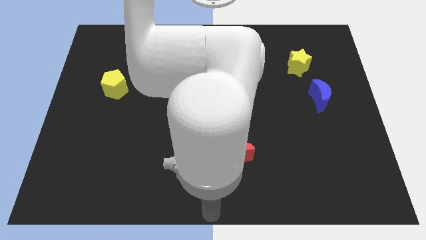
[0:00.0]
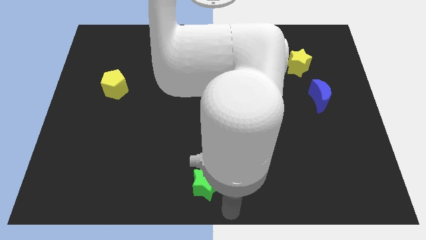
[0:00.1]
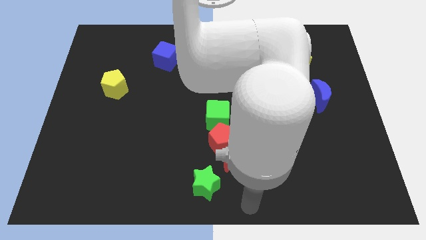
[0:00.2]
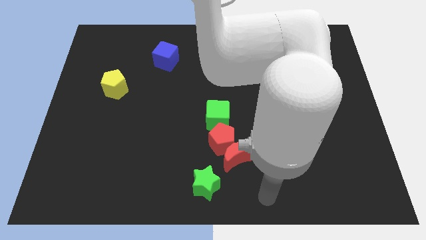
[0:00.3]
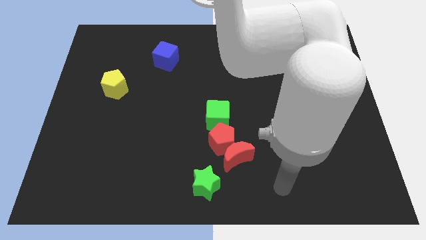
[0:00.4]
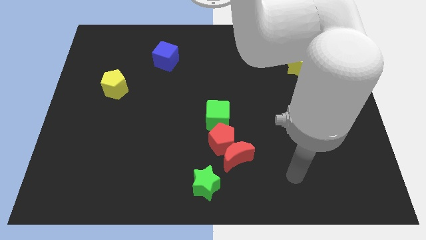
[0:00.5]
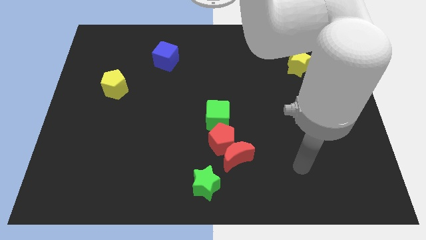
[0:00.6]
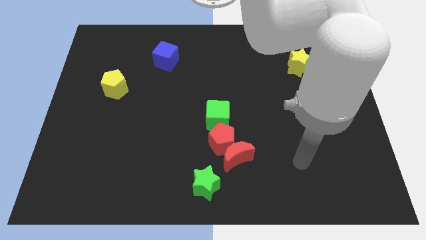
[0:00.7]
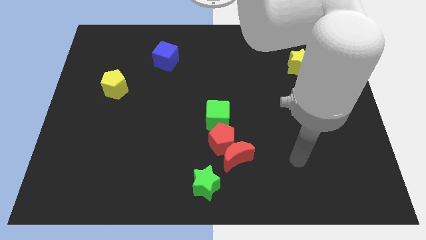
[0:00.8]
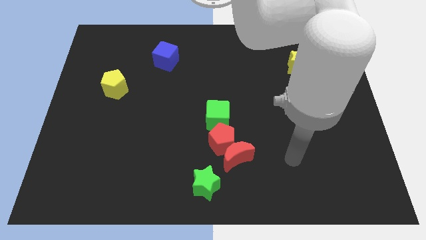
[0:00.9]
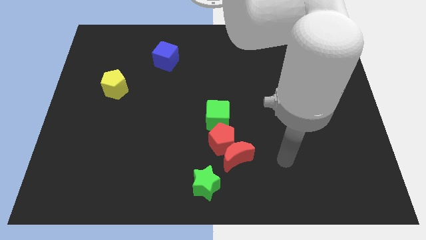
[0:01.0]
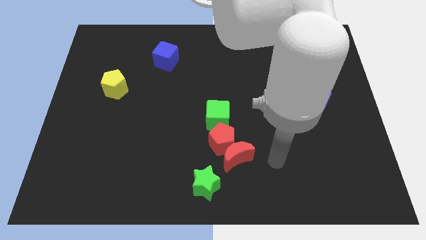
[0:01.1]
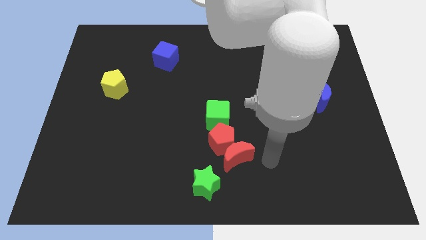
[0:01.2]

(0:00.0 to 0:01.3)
drag your arm towards center

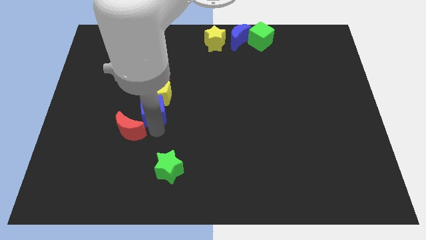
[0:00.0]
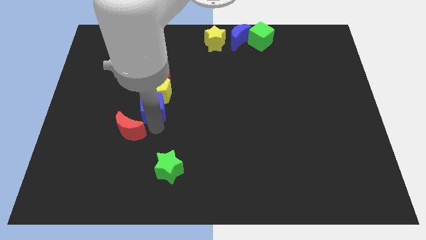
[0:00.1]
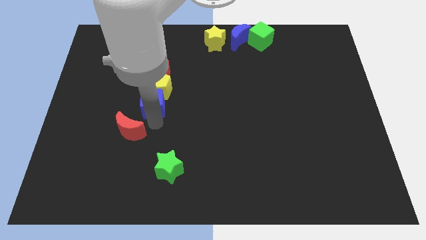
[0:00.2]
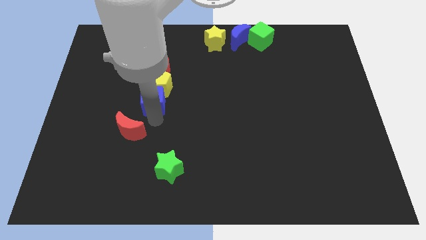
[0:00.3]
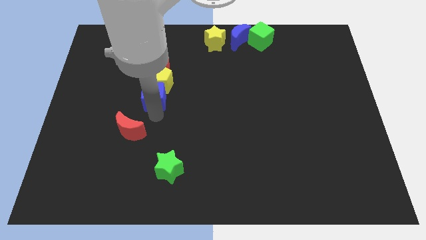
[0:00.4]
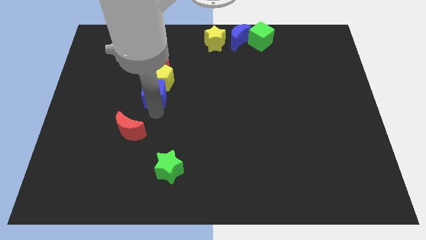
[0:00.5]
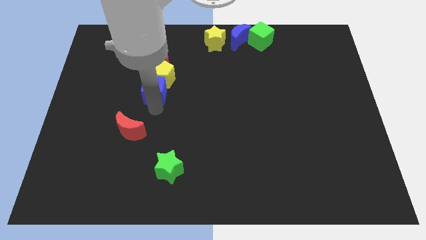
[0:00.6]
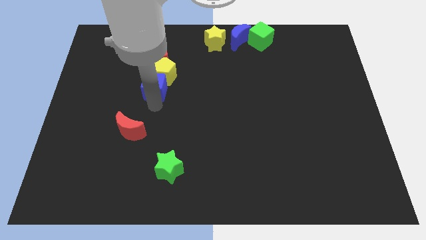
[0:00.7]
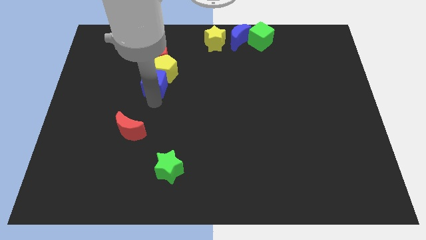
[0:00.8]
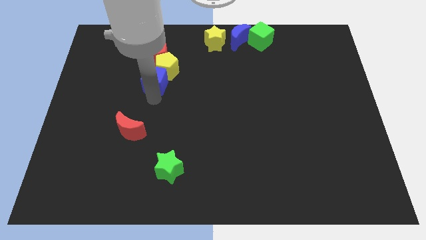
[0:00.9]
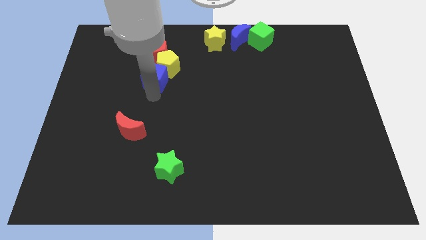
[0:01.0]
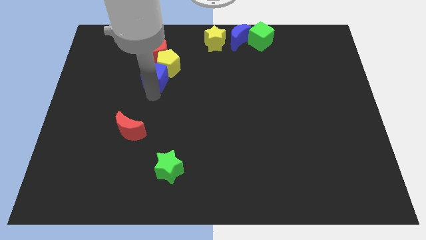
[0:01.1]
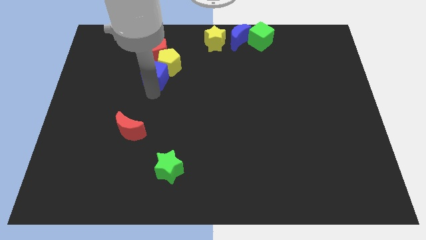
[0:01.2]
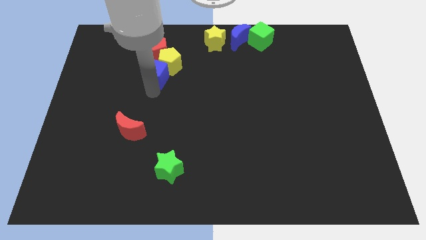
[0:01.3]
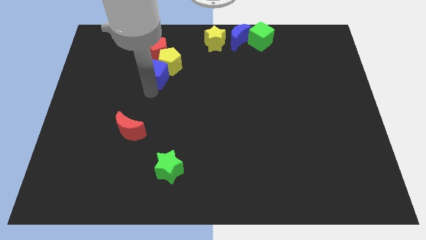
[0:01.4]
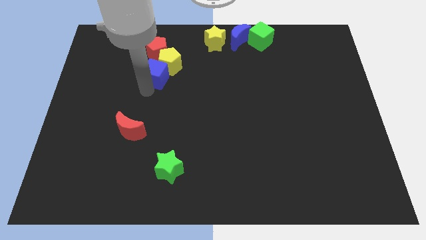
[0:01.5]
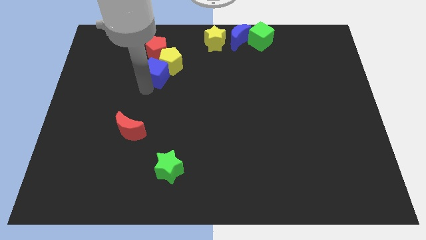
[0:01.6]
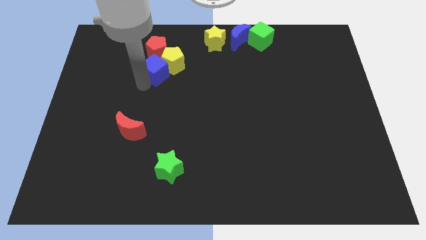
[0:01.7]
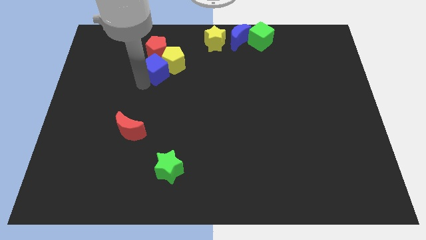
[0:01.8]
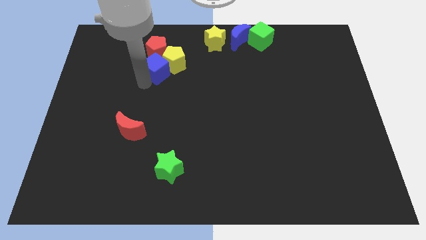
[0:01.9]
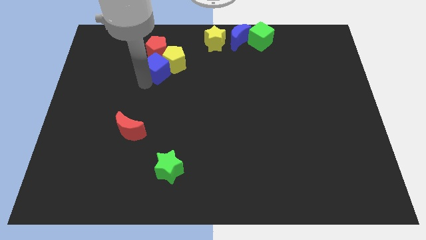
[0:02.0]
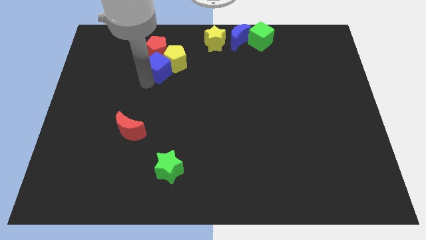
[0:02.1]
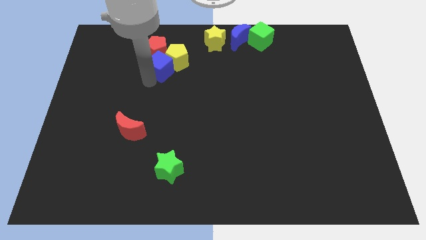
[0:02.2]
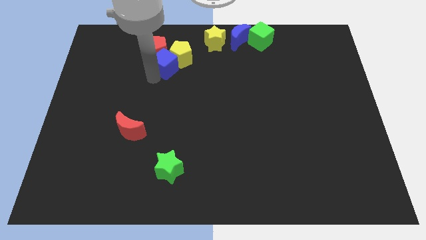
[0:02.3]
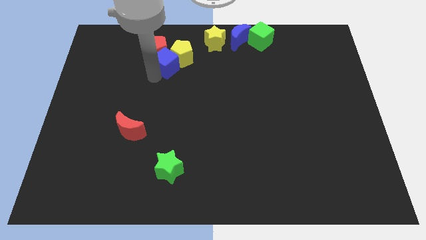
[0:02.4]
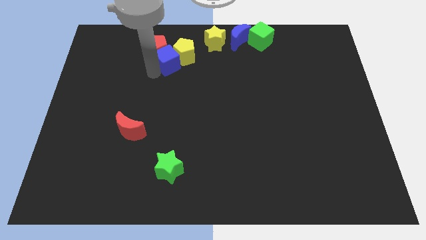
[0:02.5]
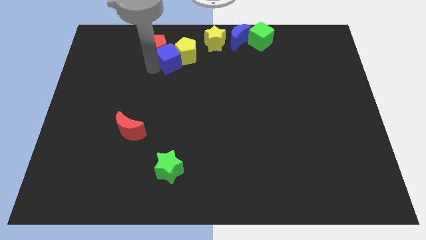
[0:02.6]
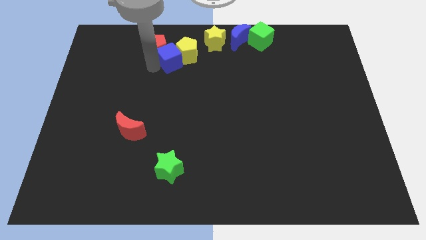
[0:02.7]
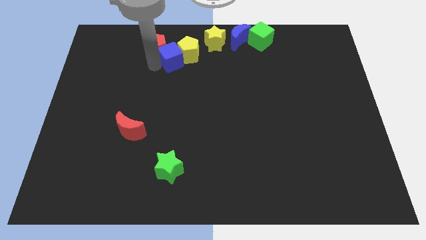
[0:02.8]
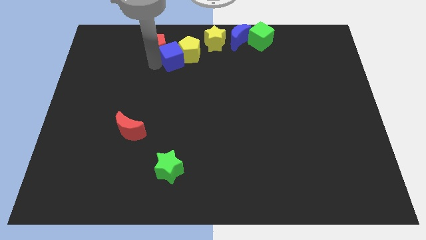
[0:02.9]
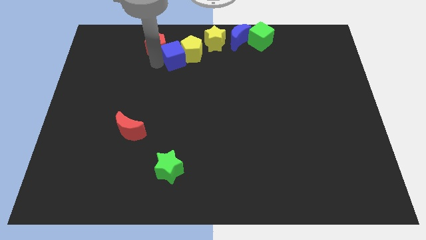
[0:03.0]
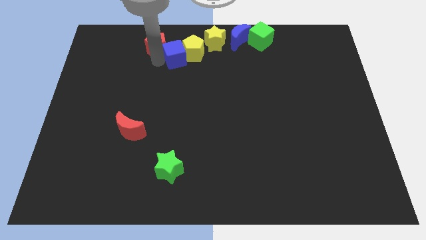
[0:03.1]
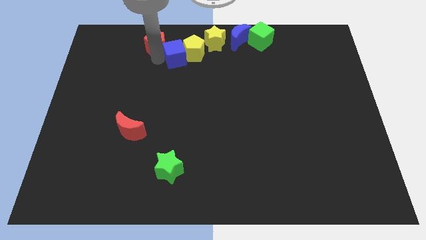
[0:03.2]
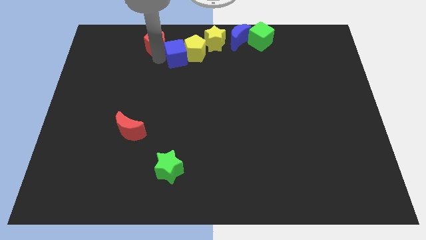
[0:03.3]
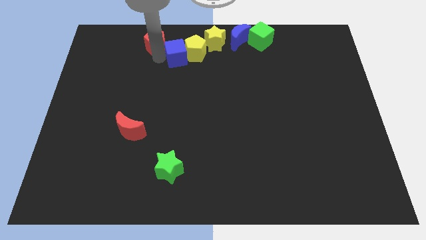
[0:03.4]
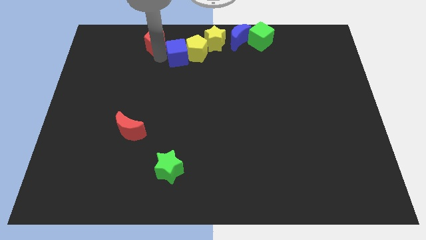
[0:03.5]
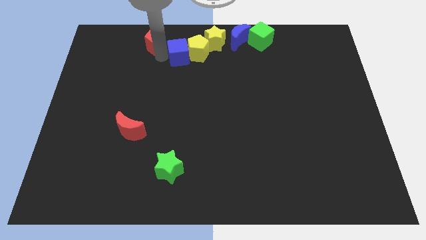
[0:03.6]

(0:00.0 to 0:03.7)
push the blue cube along with the yellow pentagon left to the yellow star

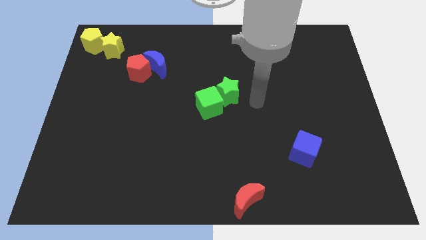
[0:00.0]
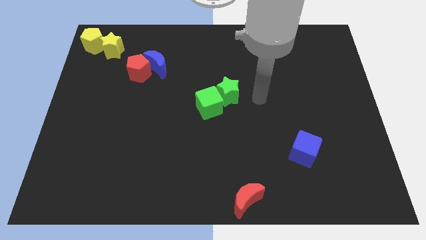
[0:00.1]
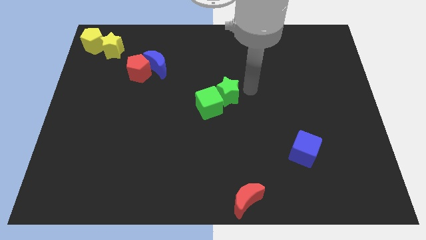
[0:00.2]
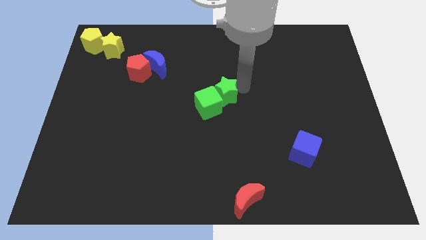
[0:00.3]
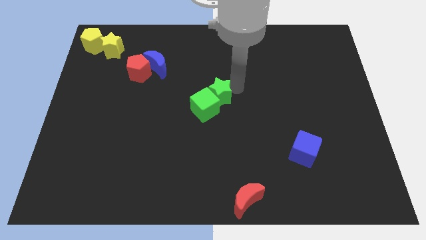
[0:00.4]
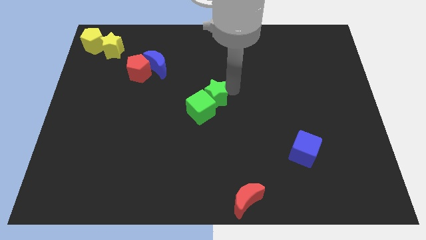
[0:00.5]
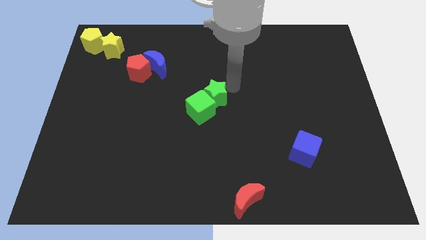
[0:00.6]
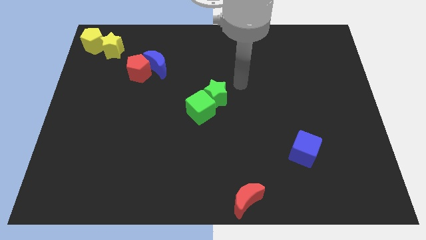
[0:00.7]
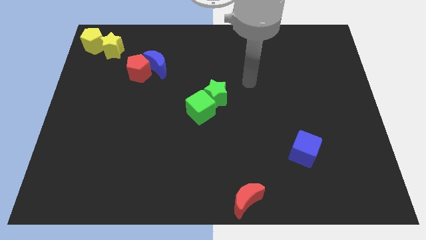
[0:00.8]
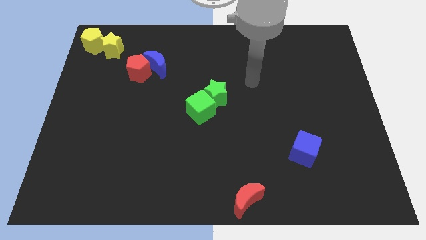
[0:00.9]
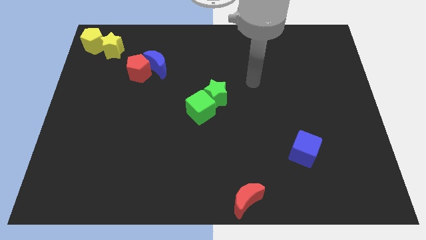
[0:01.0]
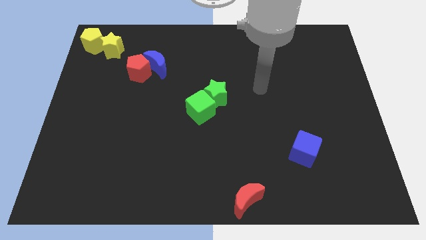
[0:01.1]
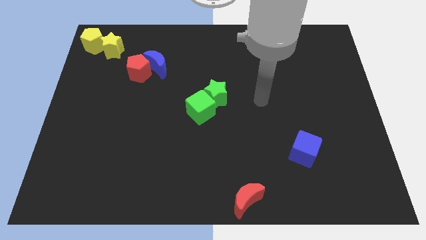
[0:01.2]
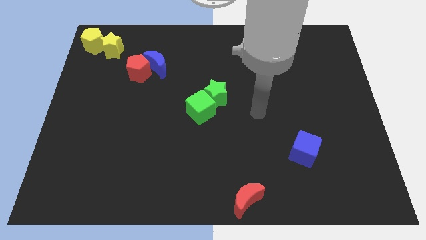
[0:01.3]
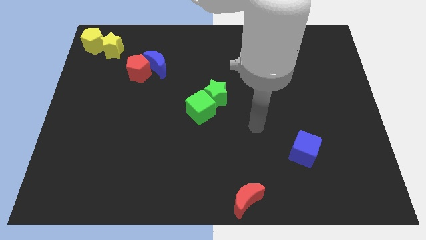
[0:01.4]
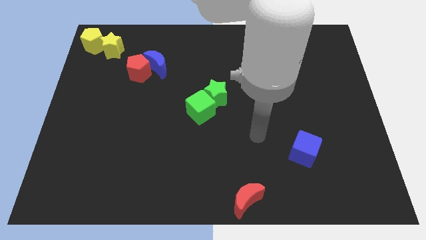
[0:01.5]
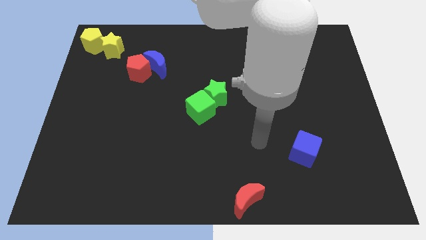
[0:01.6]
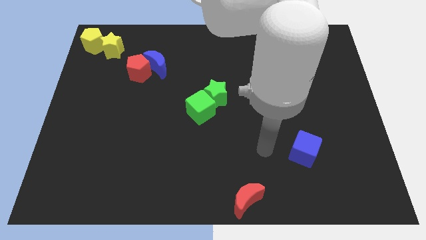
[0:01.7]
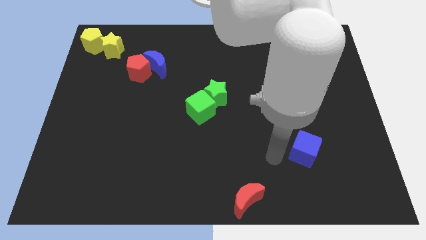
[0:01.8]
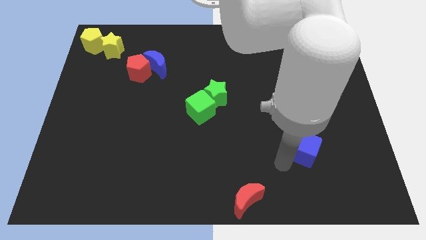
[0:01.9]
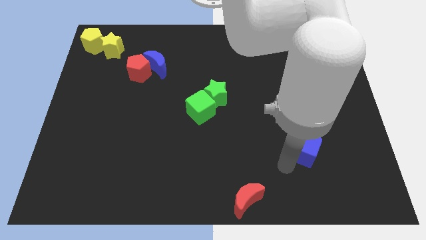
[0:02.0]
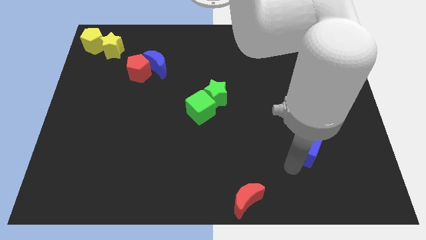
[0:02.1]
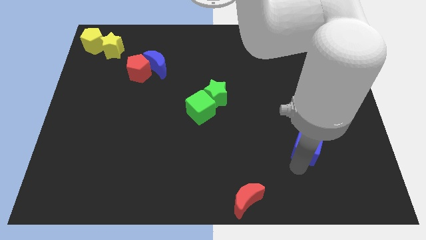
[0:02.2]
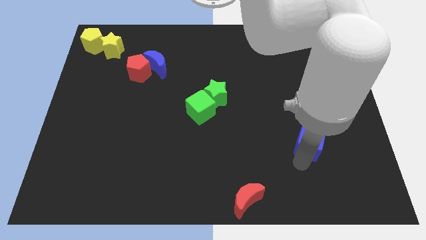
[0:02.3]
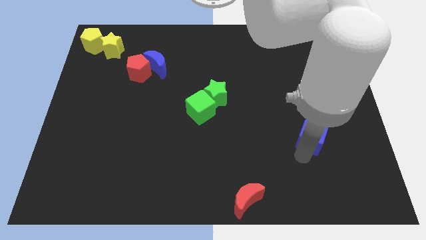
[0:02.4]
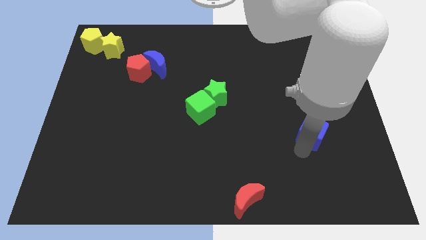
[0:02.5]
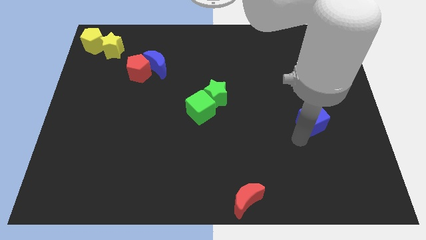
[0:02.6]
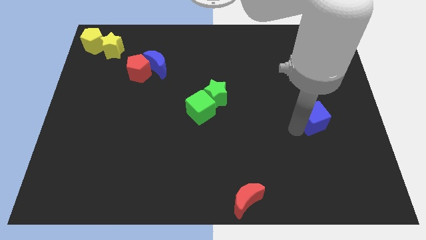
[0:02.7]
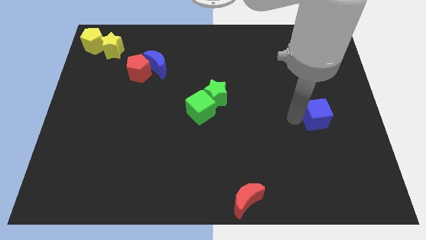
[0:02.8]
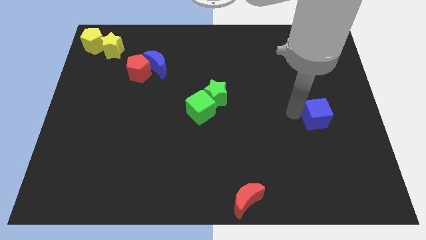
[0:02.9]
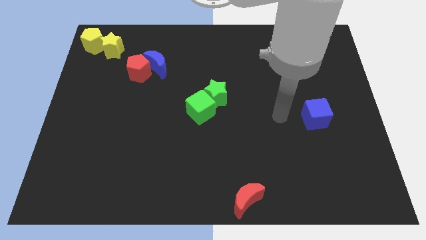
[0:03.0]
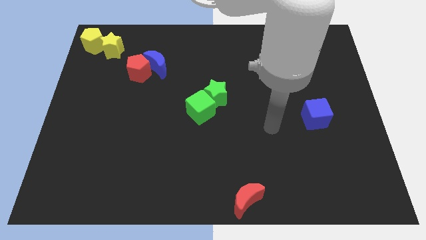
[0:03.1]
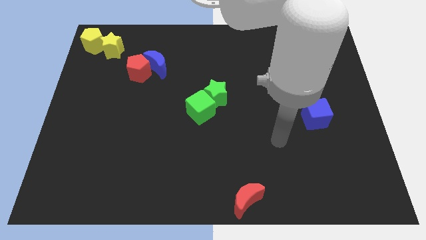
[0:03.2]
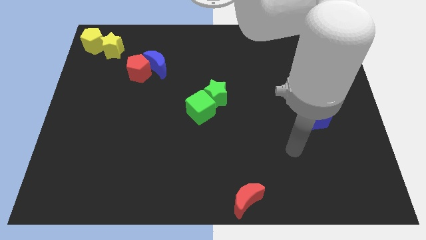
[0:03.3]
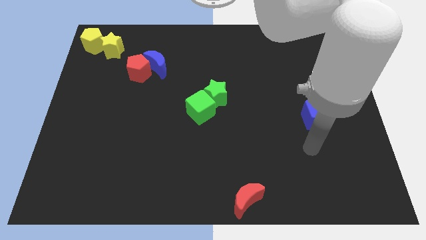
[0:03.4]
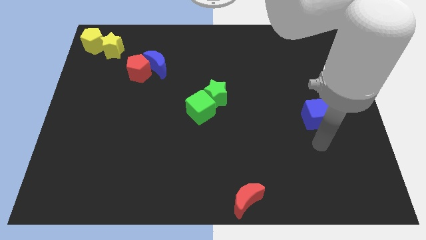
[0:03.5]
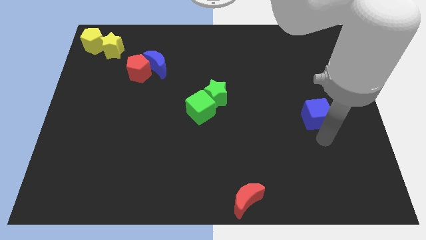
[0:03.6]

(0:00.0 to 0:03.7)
move blue cube slightly up

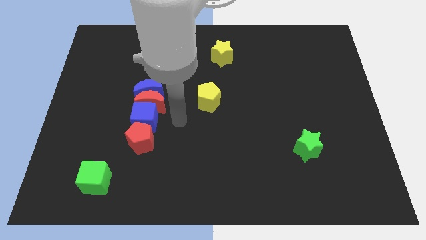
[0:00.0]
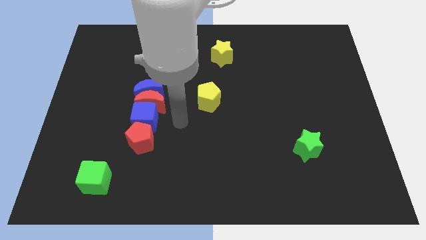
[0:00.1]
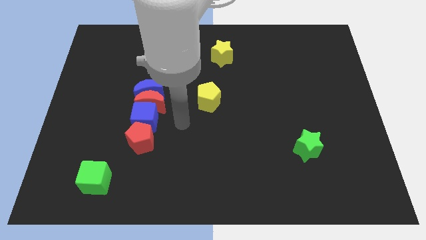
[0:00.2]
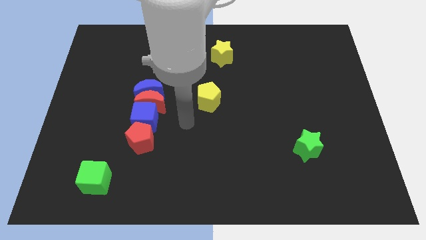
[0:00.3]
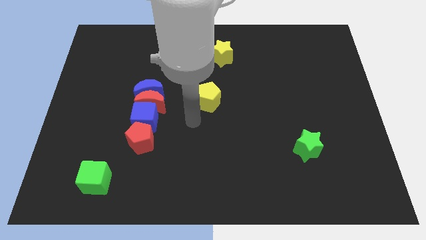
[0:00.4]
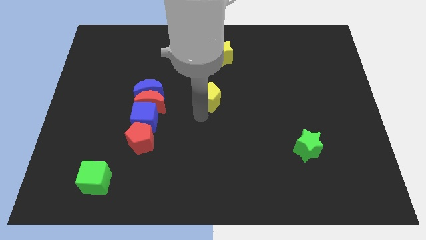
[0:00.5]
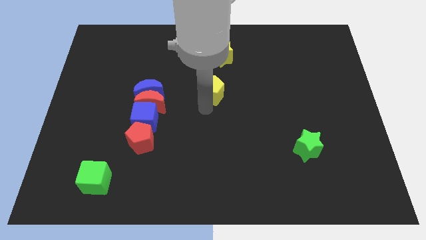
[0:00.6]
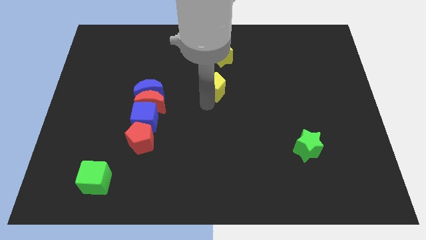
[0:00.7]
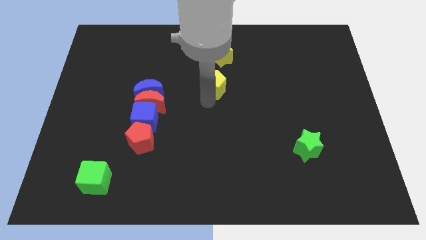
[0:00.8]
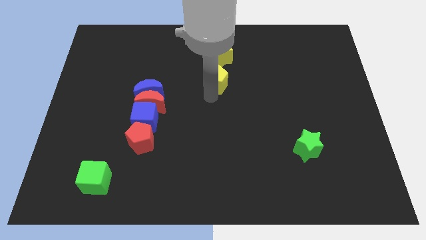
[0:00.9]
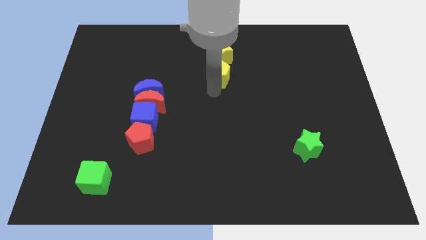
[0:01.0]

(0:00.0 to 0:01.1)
drag yellow pentagon towards yellow star
